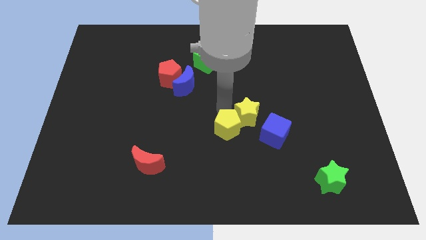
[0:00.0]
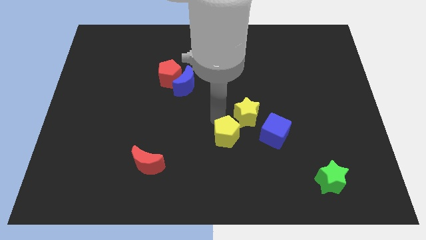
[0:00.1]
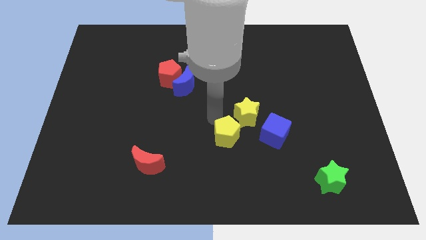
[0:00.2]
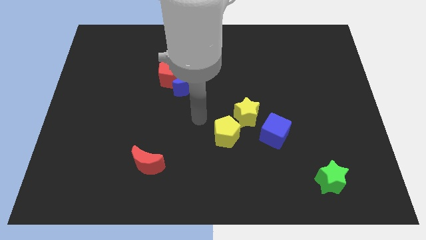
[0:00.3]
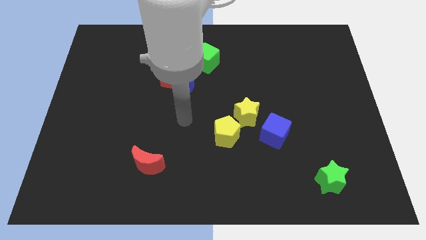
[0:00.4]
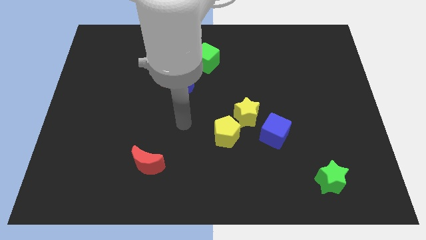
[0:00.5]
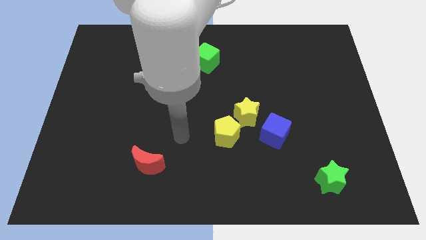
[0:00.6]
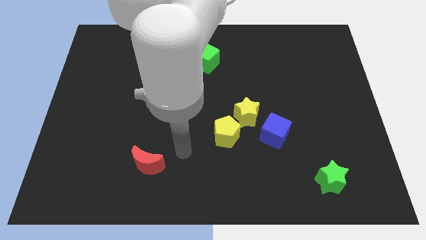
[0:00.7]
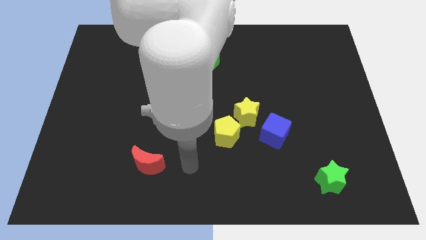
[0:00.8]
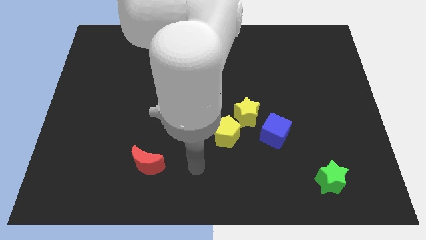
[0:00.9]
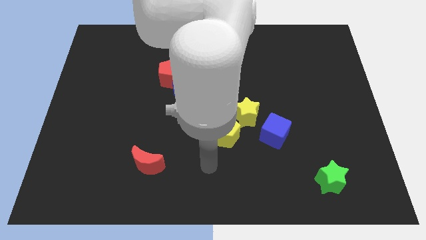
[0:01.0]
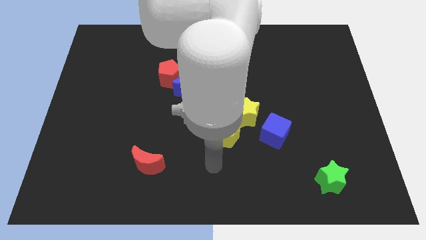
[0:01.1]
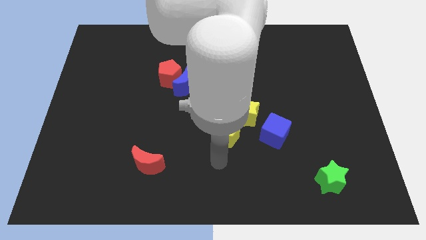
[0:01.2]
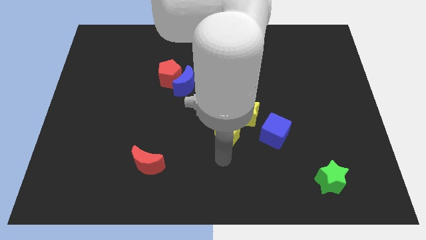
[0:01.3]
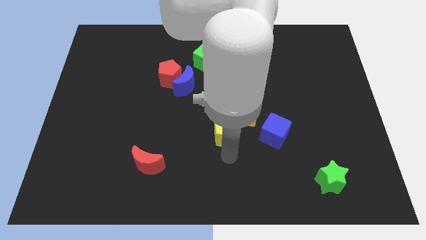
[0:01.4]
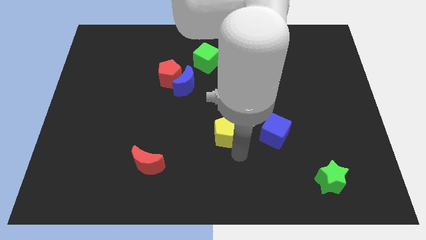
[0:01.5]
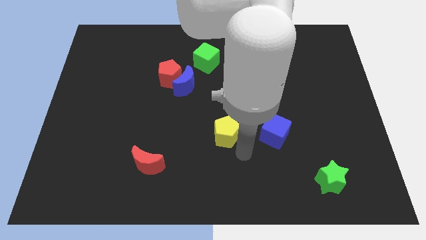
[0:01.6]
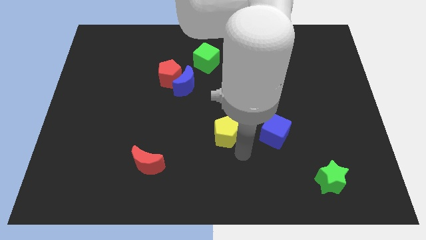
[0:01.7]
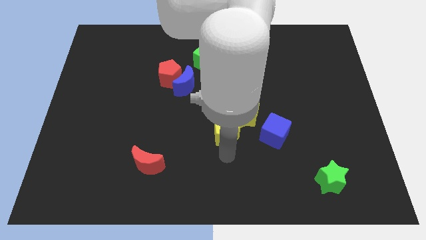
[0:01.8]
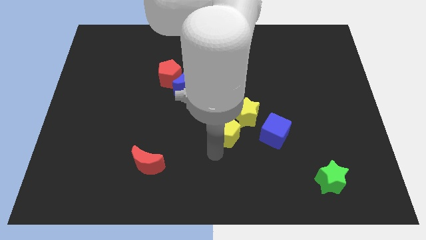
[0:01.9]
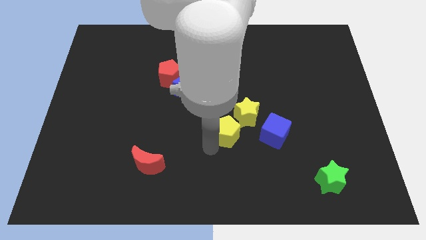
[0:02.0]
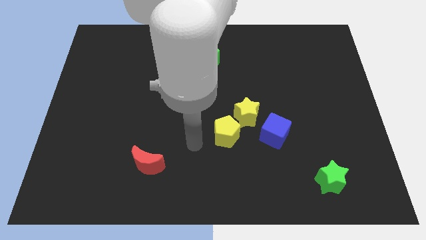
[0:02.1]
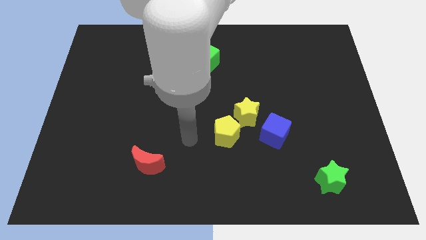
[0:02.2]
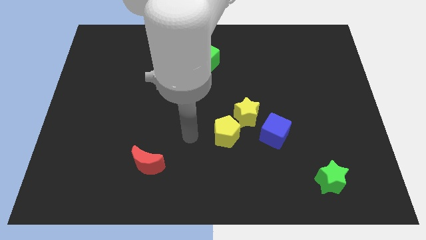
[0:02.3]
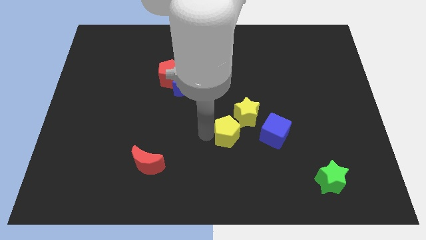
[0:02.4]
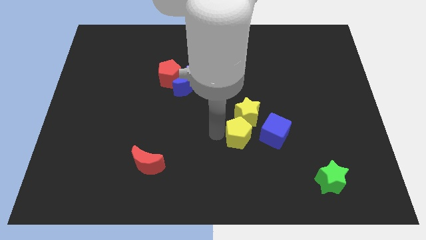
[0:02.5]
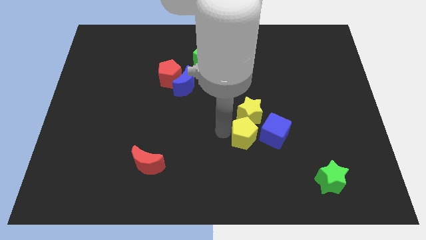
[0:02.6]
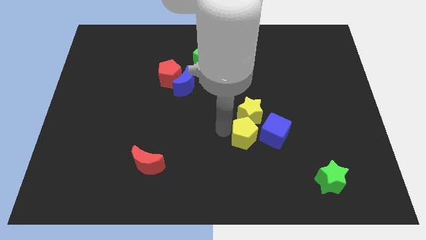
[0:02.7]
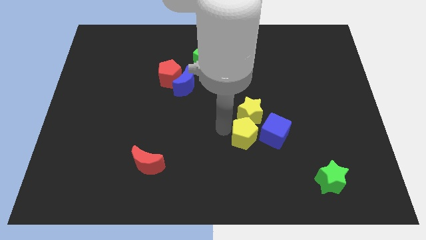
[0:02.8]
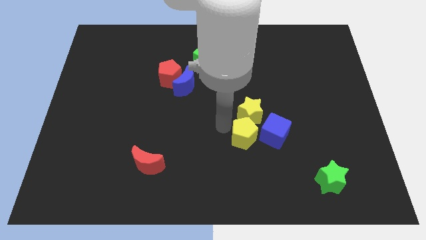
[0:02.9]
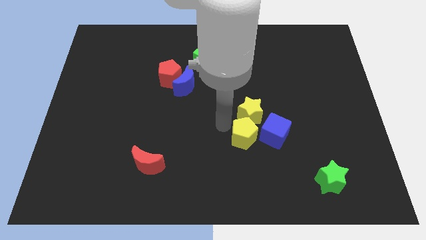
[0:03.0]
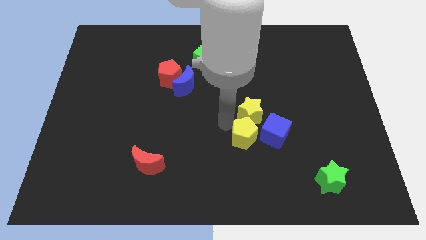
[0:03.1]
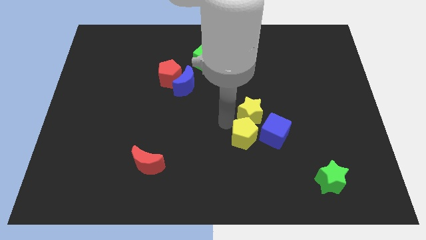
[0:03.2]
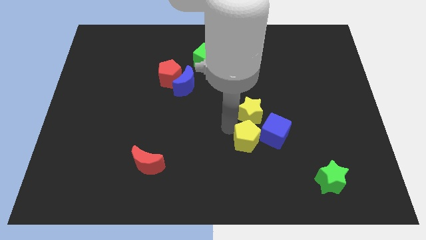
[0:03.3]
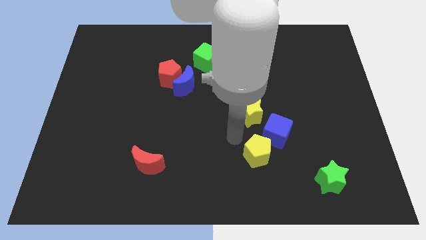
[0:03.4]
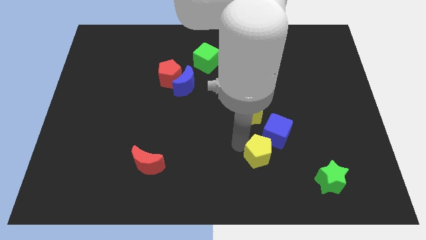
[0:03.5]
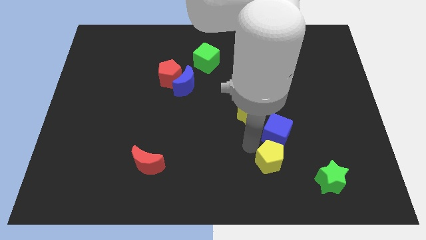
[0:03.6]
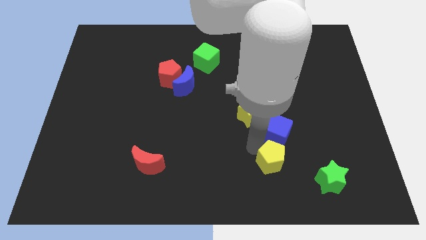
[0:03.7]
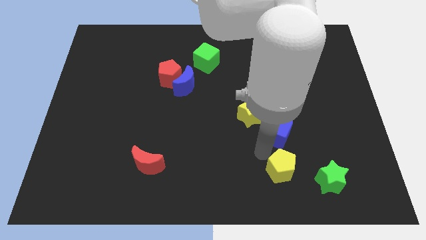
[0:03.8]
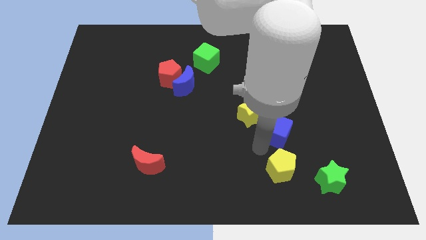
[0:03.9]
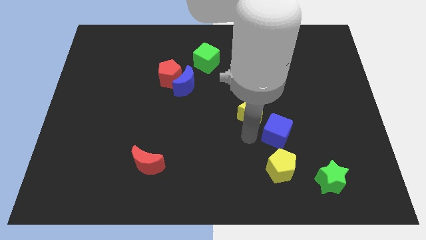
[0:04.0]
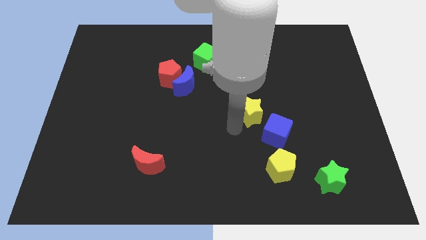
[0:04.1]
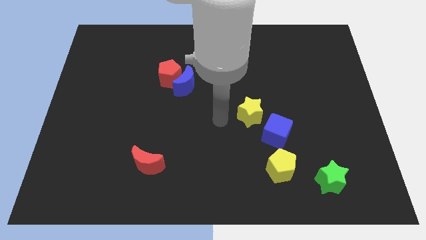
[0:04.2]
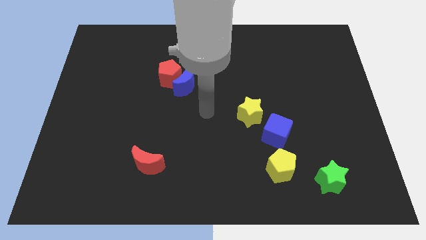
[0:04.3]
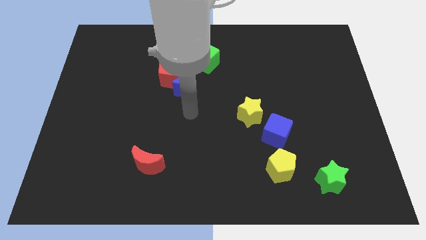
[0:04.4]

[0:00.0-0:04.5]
place the yellow pentagon below the blue cube

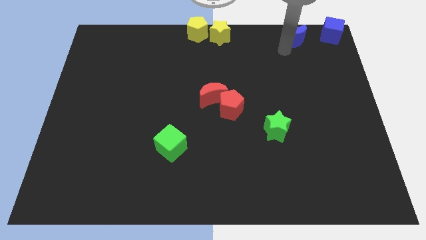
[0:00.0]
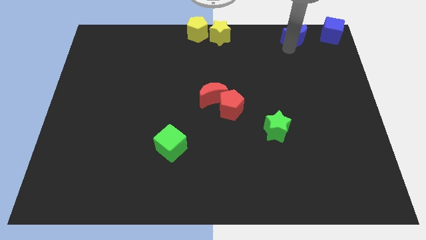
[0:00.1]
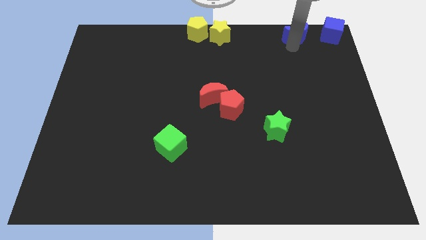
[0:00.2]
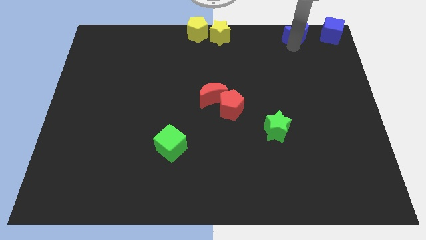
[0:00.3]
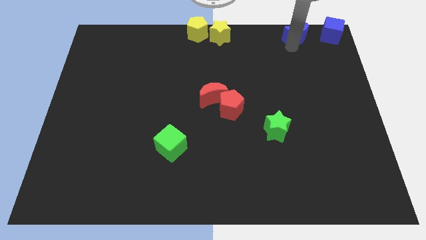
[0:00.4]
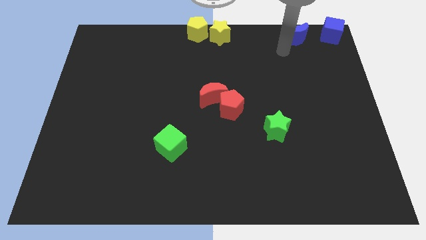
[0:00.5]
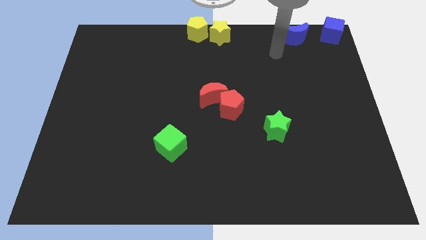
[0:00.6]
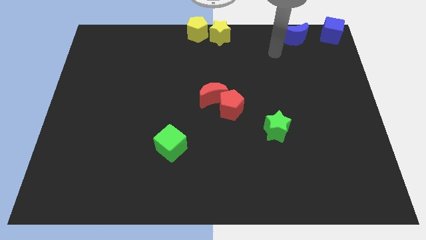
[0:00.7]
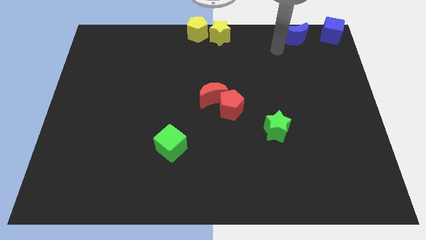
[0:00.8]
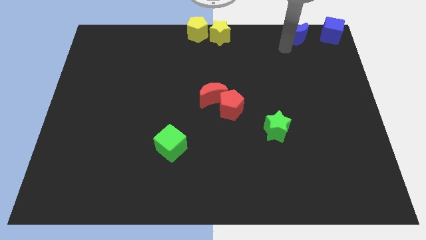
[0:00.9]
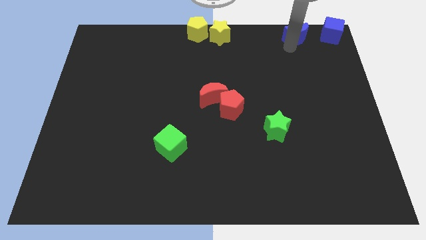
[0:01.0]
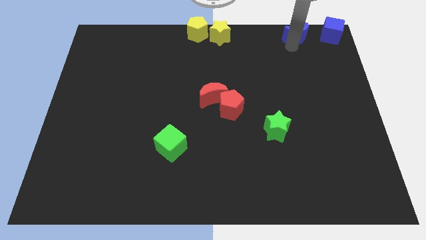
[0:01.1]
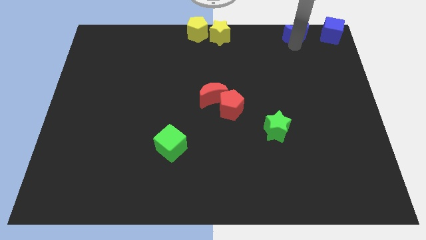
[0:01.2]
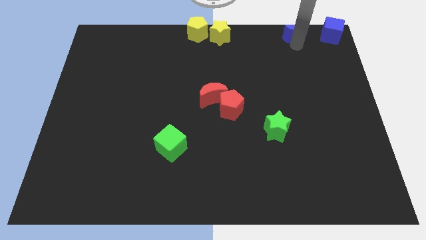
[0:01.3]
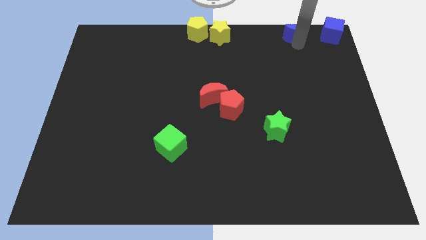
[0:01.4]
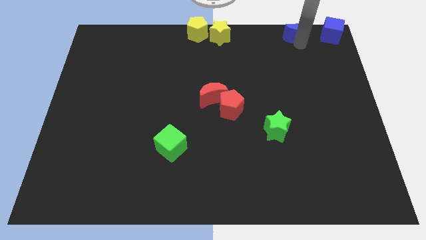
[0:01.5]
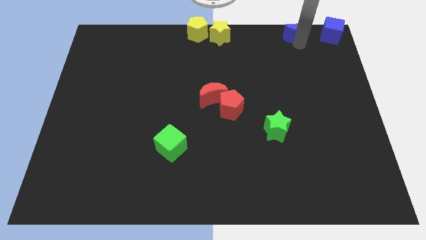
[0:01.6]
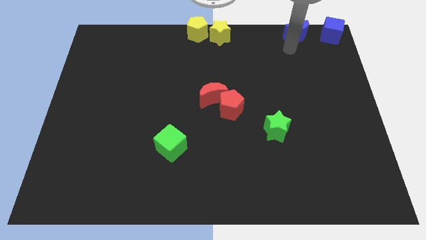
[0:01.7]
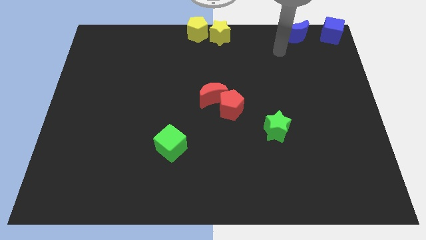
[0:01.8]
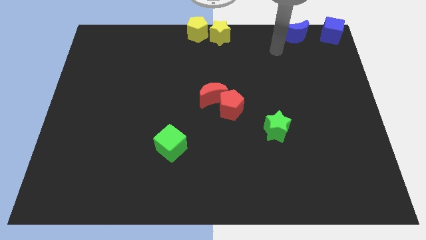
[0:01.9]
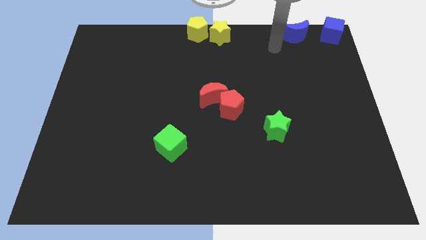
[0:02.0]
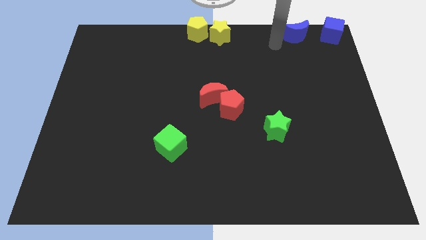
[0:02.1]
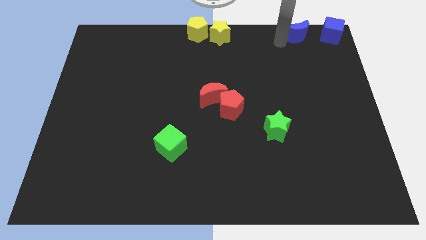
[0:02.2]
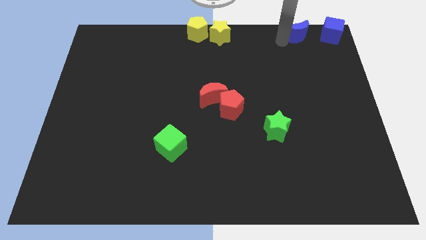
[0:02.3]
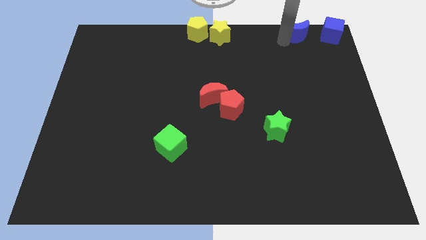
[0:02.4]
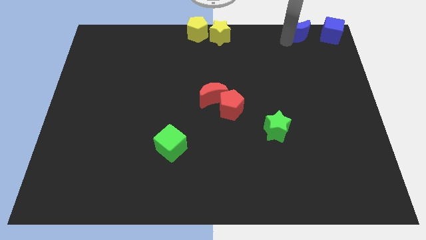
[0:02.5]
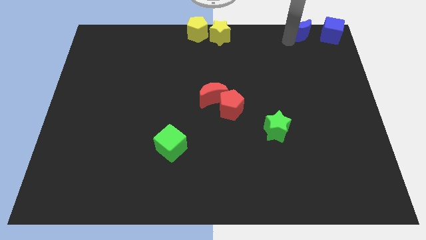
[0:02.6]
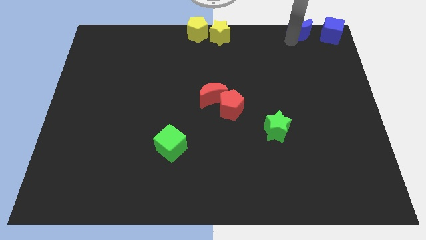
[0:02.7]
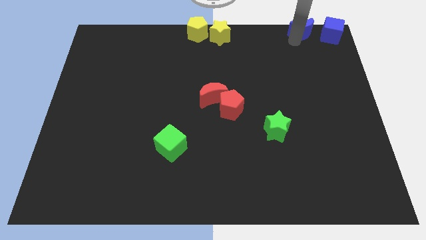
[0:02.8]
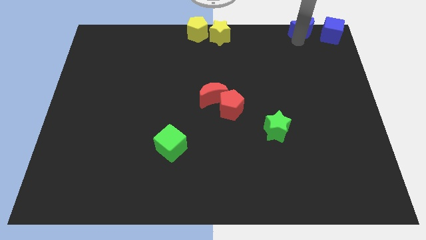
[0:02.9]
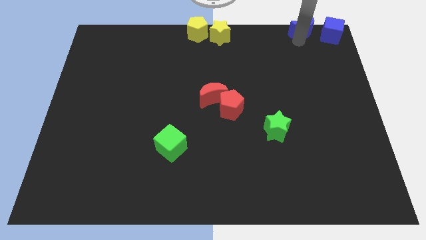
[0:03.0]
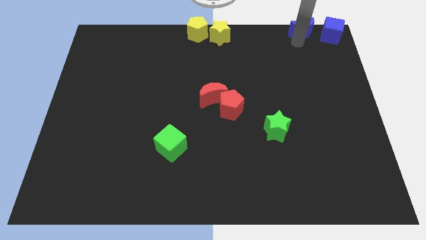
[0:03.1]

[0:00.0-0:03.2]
move blue moon close to the top

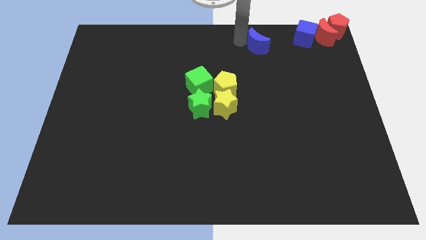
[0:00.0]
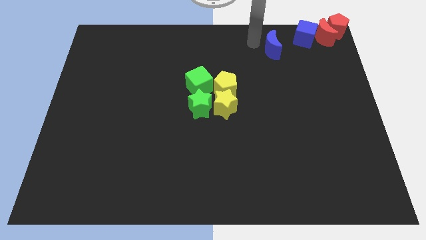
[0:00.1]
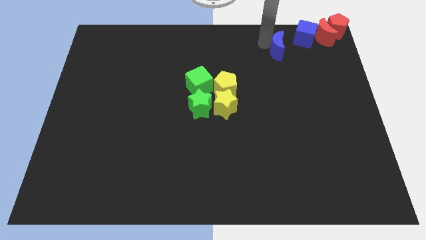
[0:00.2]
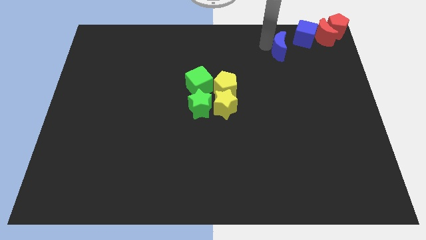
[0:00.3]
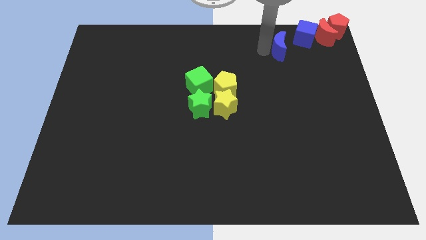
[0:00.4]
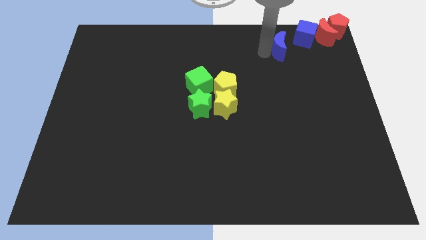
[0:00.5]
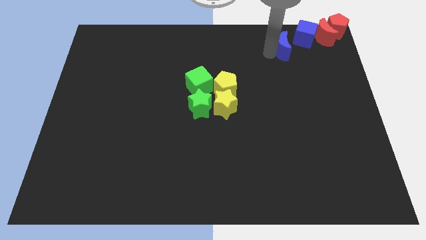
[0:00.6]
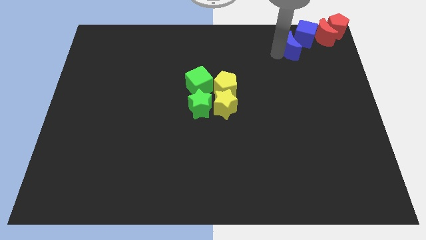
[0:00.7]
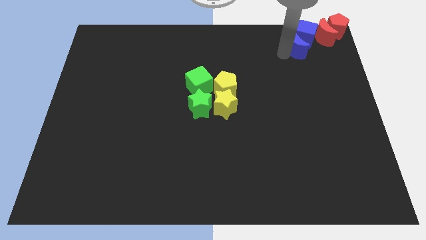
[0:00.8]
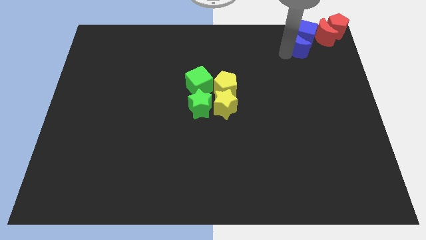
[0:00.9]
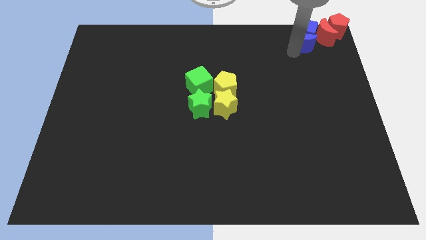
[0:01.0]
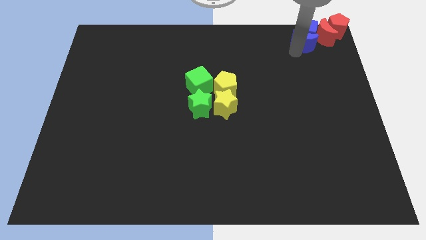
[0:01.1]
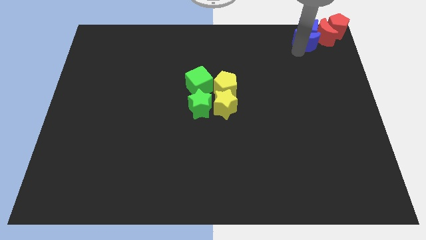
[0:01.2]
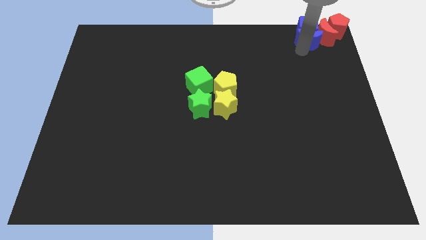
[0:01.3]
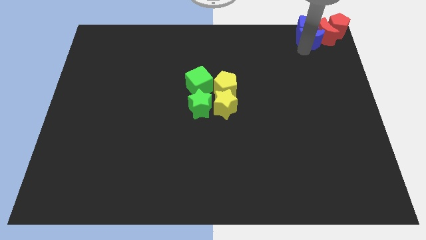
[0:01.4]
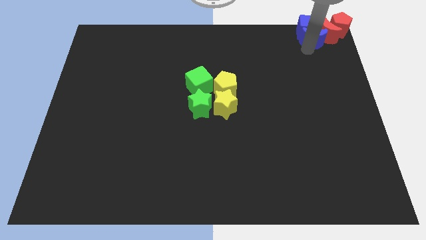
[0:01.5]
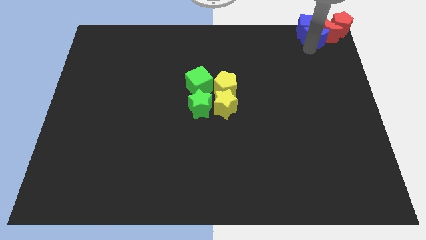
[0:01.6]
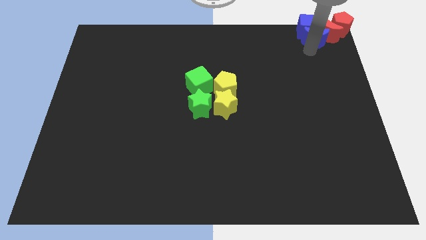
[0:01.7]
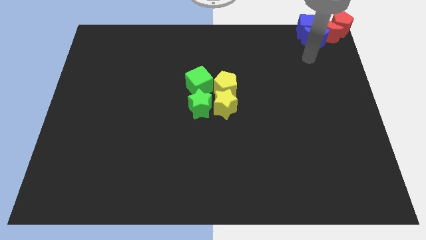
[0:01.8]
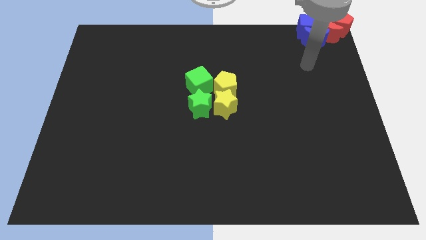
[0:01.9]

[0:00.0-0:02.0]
move the blue crescent to the bottom of the blue cube
